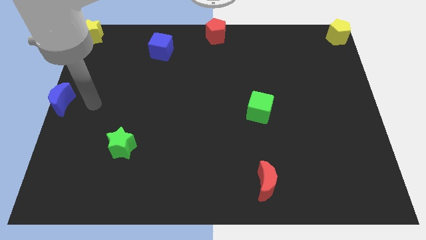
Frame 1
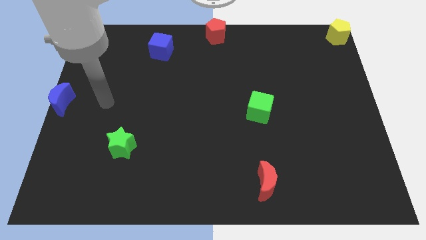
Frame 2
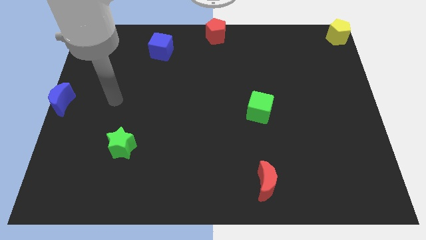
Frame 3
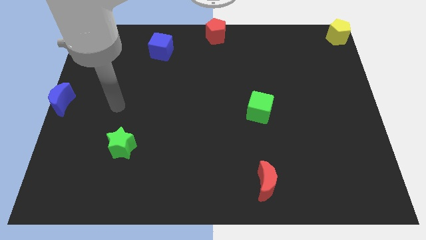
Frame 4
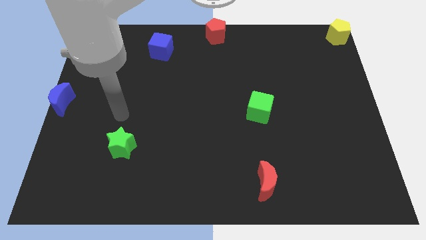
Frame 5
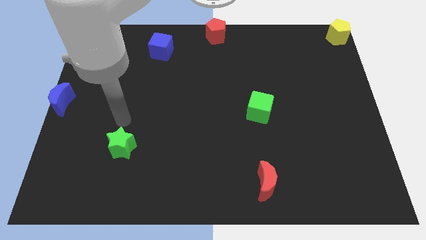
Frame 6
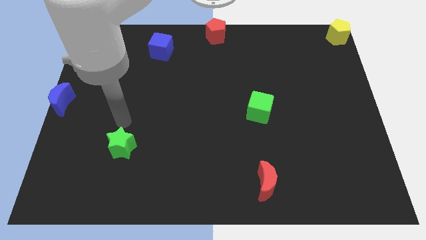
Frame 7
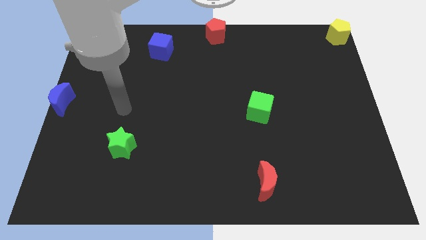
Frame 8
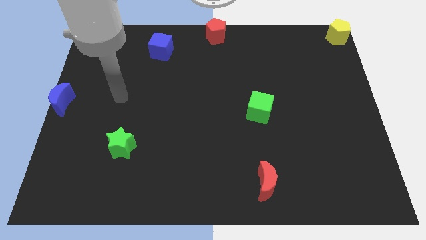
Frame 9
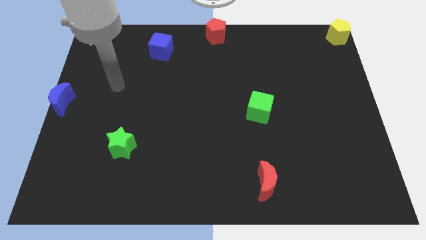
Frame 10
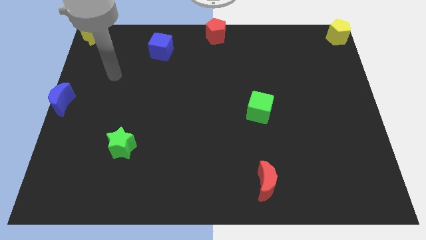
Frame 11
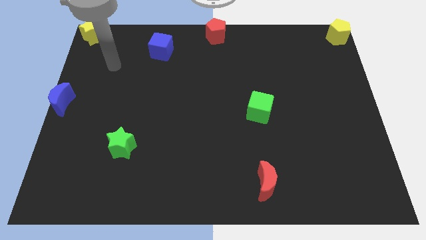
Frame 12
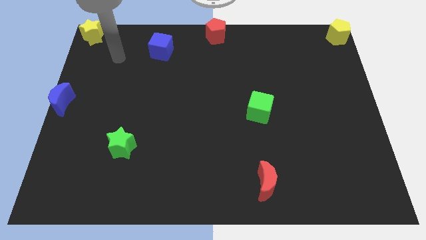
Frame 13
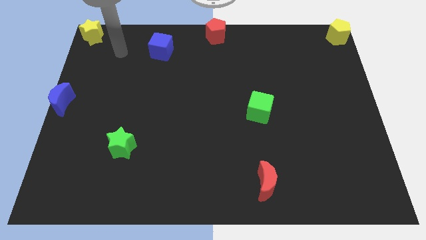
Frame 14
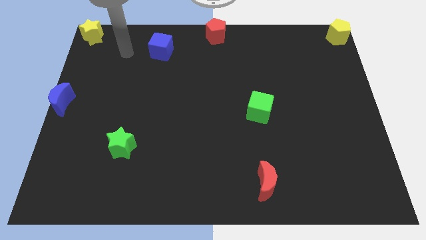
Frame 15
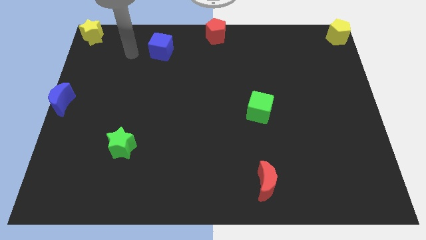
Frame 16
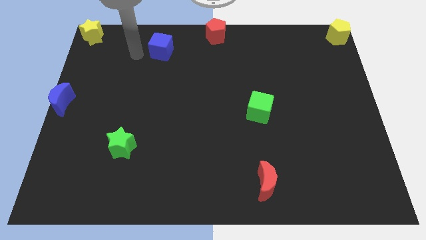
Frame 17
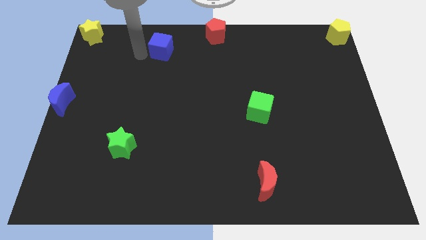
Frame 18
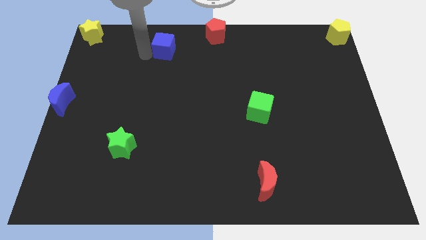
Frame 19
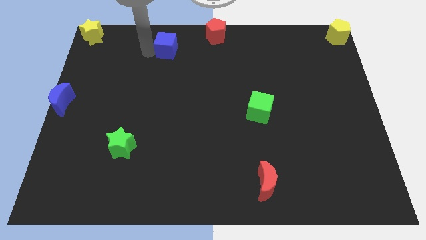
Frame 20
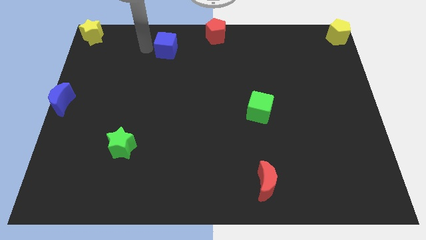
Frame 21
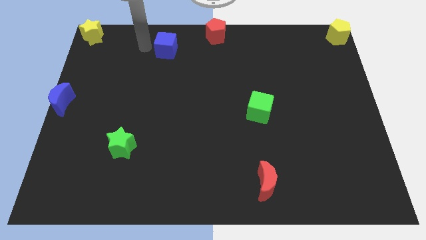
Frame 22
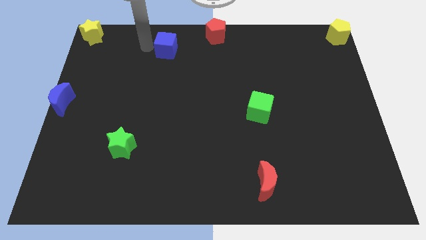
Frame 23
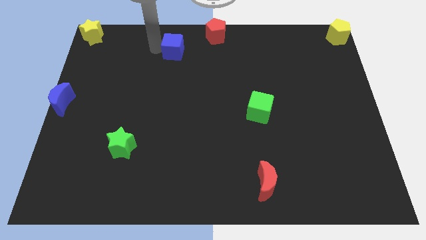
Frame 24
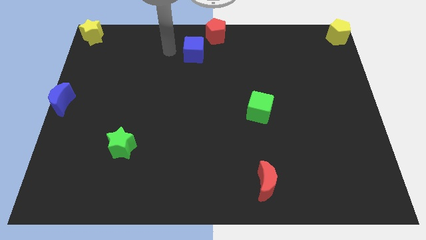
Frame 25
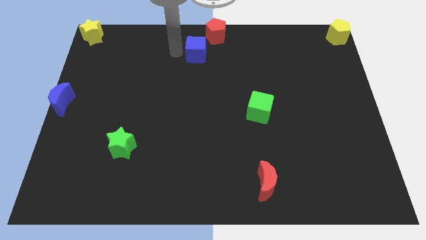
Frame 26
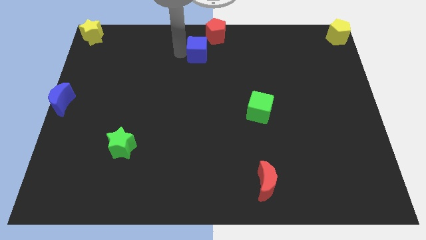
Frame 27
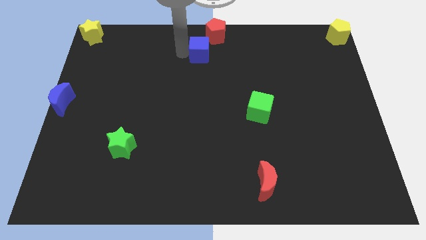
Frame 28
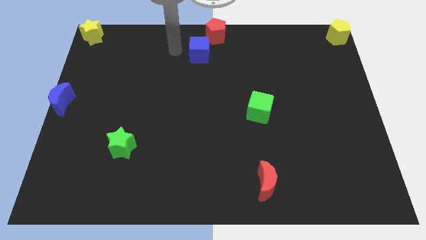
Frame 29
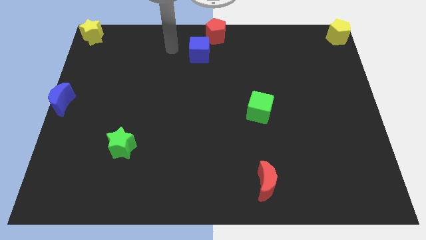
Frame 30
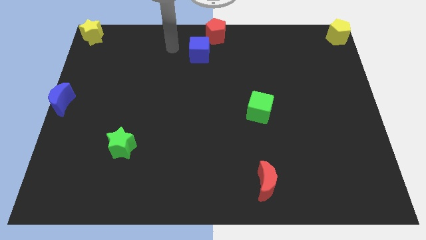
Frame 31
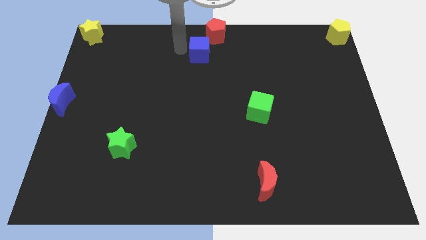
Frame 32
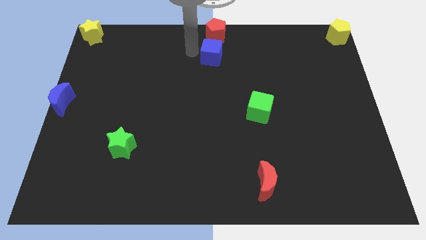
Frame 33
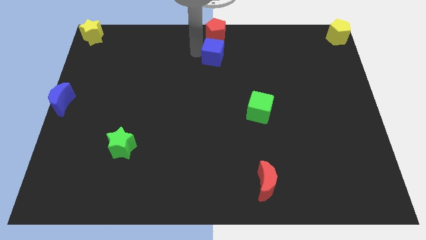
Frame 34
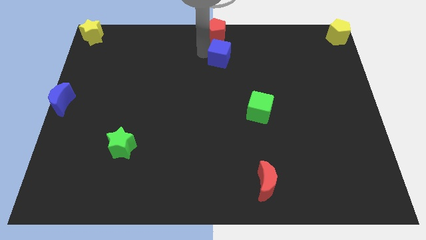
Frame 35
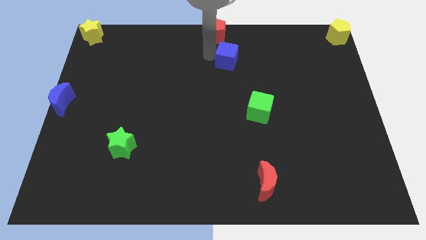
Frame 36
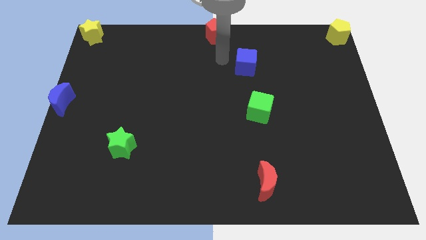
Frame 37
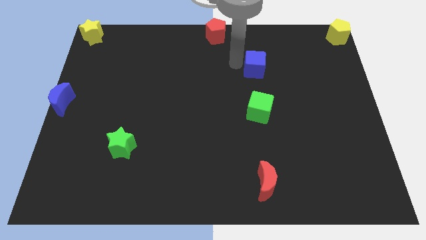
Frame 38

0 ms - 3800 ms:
place the blue cube above the green cube

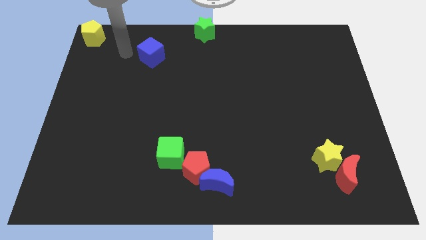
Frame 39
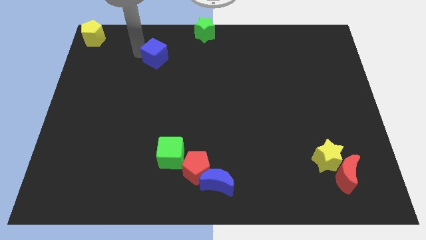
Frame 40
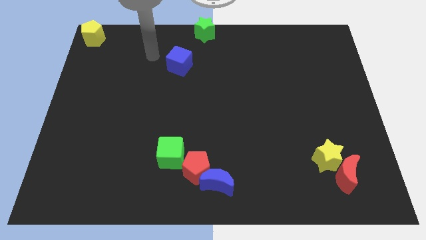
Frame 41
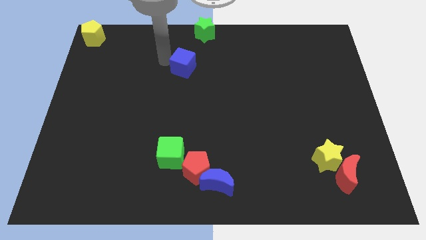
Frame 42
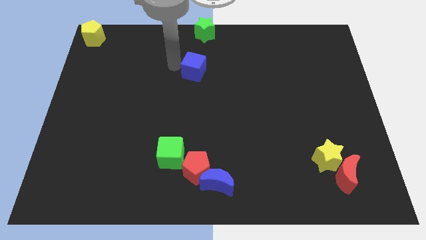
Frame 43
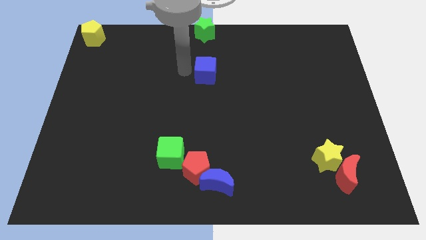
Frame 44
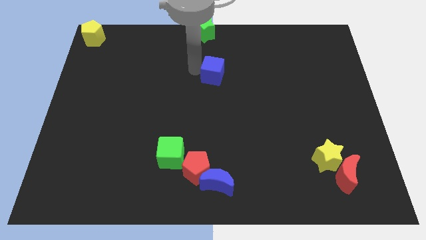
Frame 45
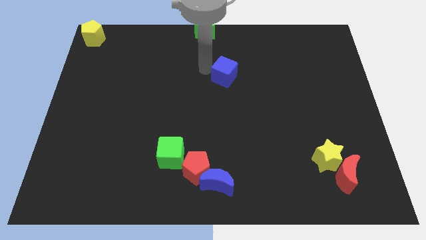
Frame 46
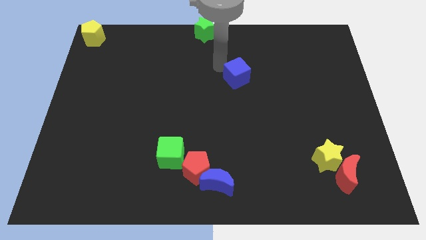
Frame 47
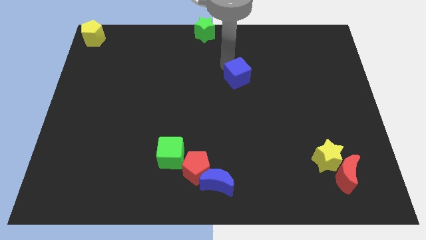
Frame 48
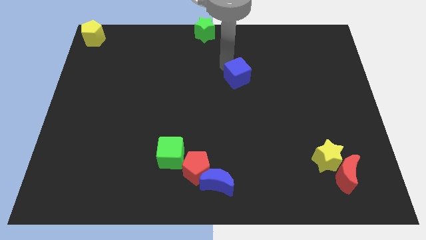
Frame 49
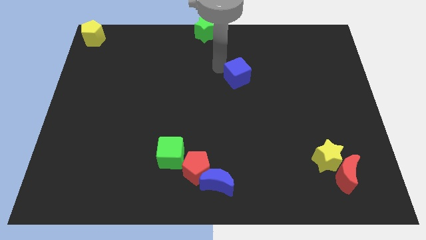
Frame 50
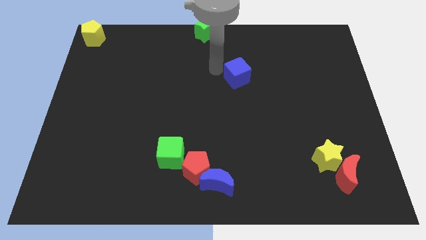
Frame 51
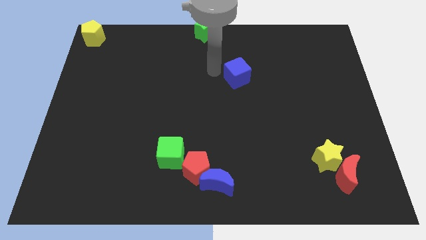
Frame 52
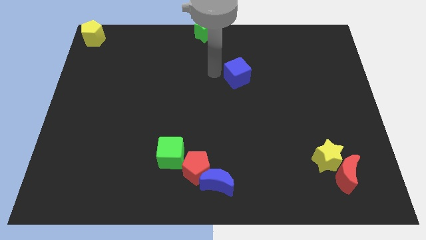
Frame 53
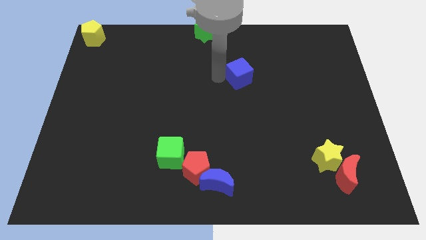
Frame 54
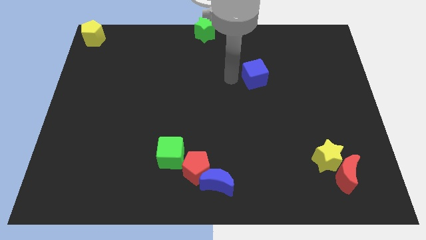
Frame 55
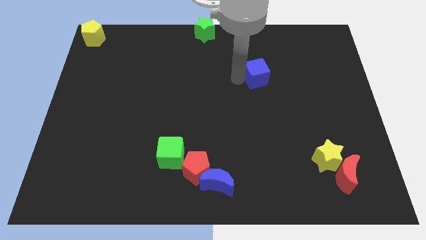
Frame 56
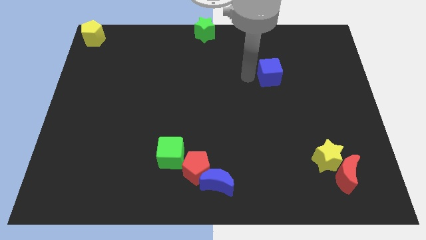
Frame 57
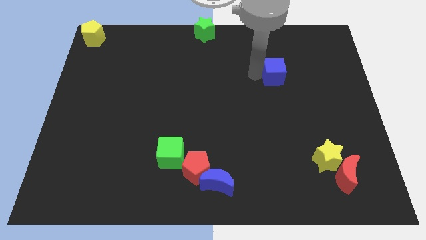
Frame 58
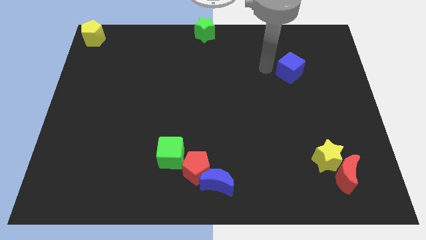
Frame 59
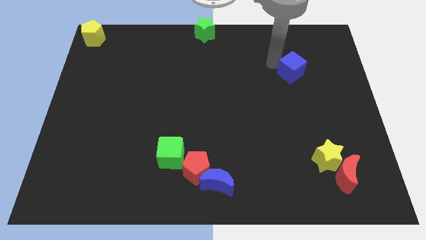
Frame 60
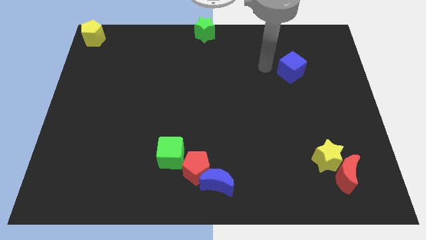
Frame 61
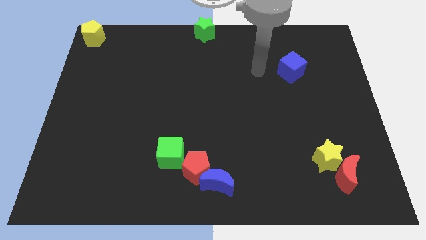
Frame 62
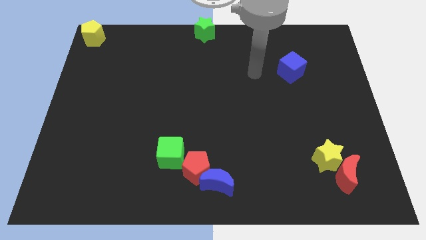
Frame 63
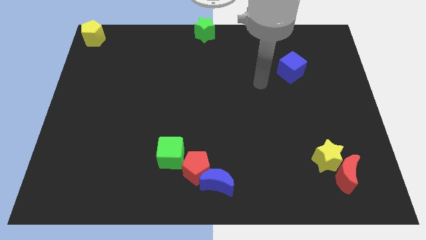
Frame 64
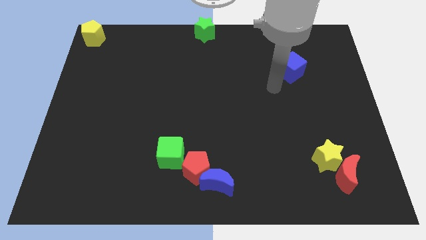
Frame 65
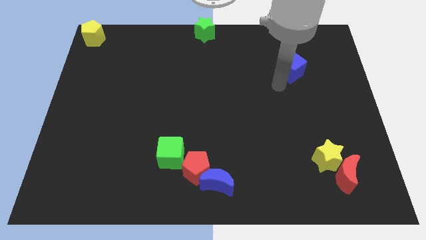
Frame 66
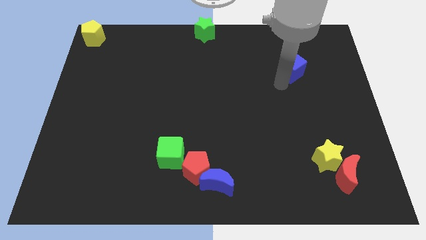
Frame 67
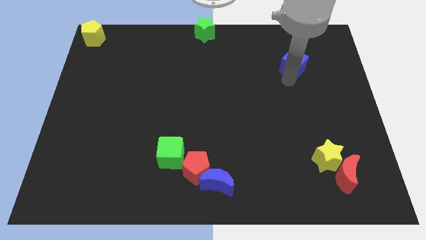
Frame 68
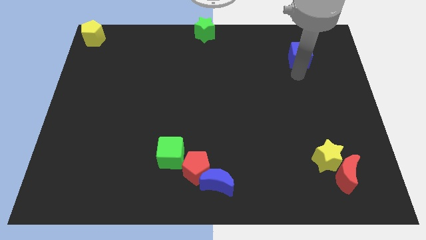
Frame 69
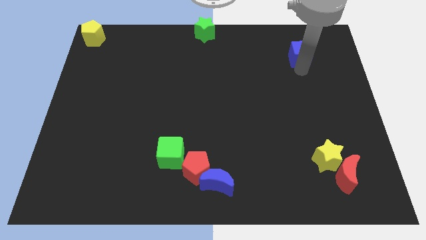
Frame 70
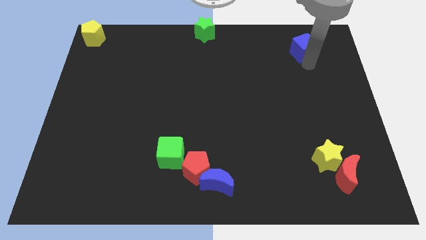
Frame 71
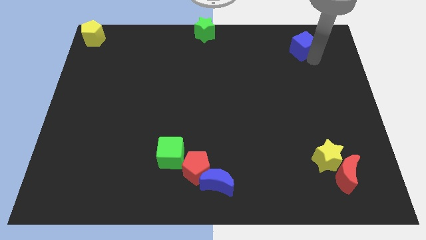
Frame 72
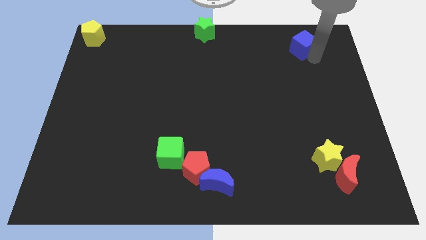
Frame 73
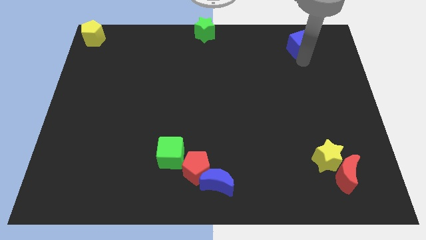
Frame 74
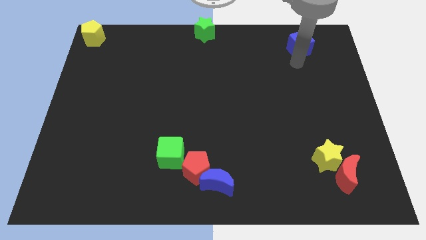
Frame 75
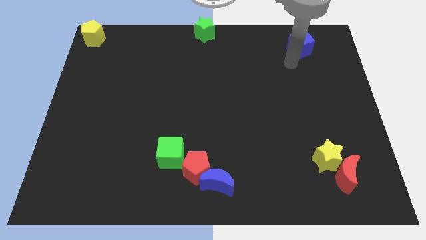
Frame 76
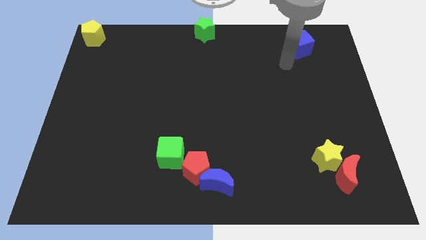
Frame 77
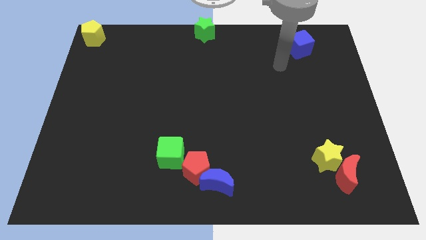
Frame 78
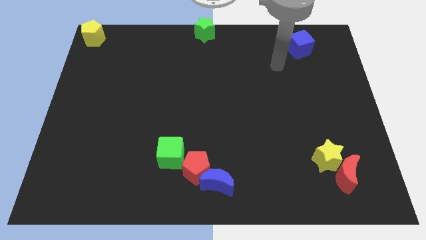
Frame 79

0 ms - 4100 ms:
push blue cube towards top right

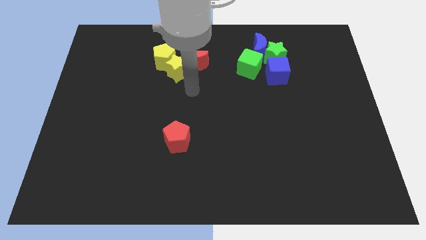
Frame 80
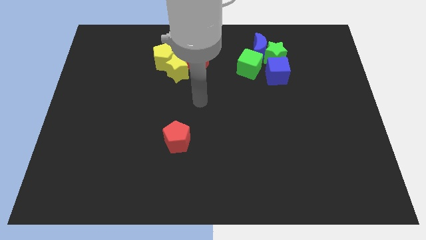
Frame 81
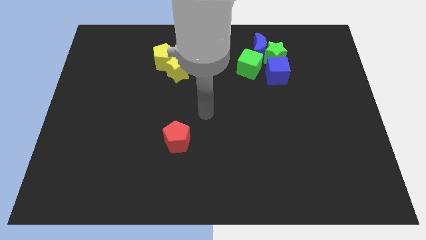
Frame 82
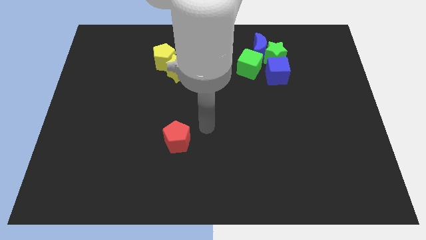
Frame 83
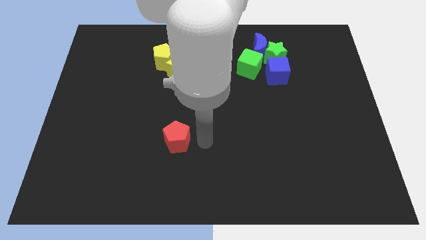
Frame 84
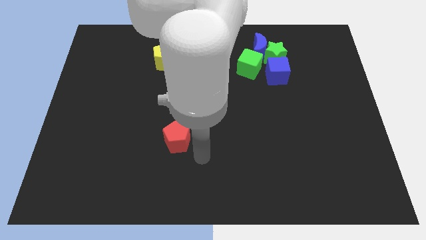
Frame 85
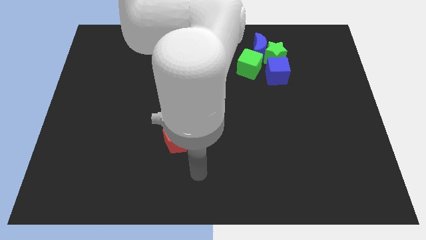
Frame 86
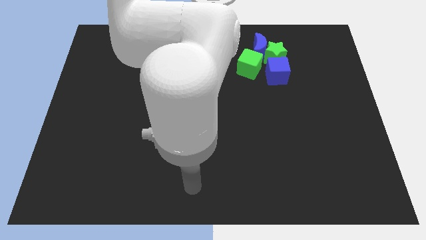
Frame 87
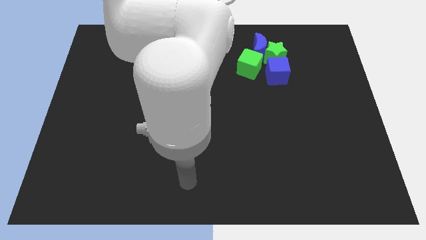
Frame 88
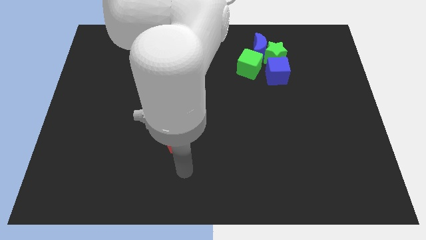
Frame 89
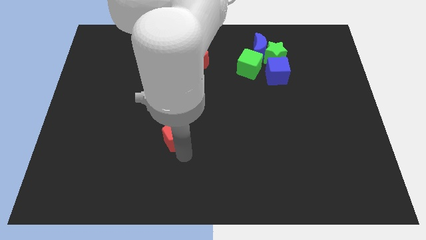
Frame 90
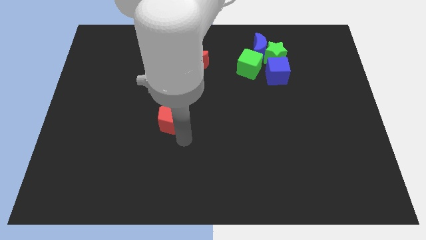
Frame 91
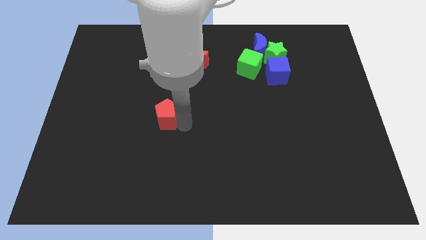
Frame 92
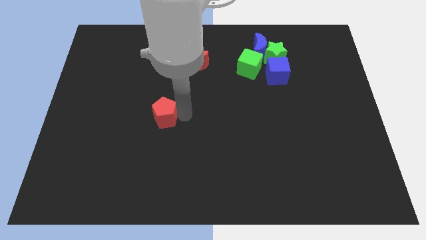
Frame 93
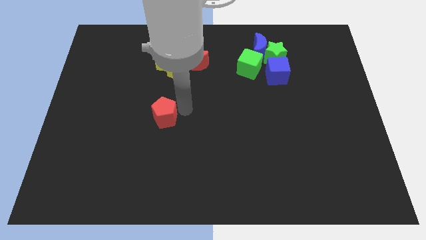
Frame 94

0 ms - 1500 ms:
push red pentagon slightly towards up
